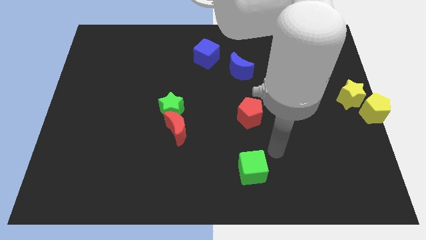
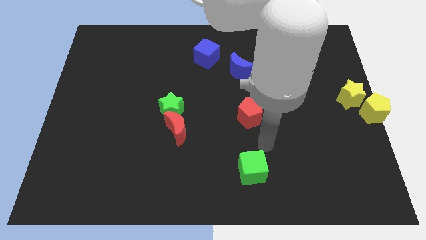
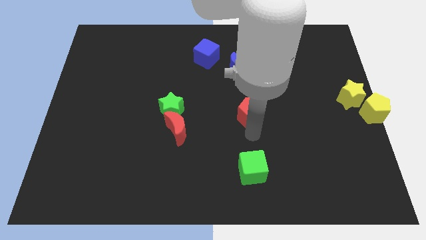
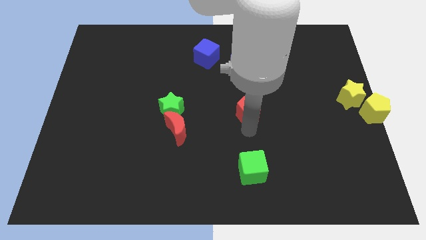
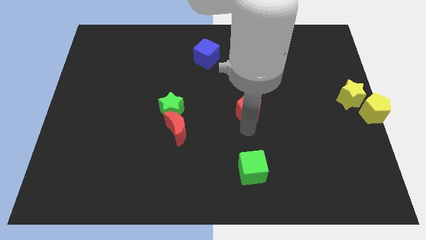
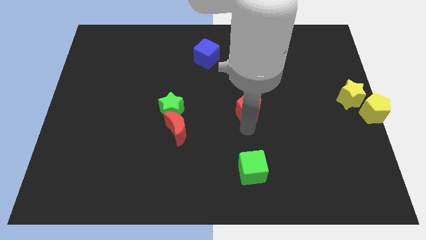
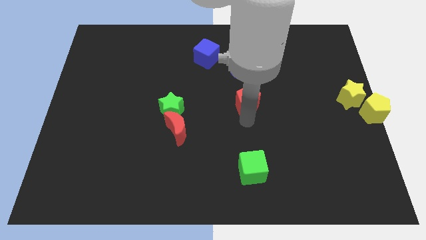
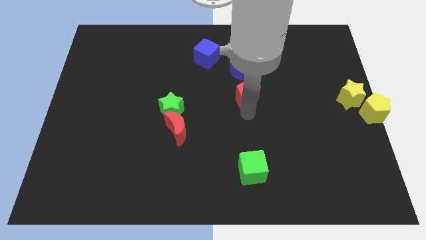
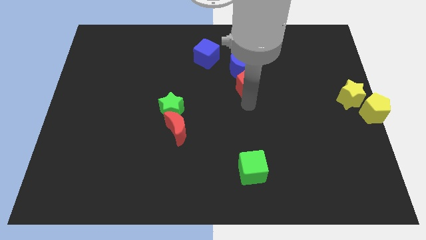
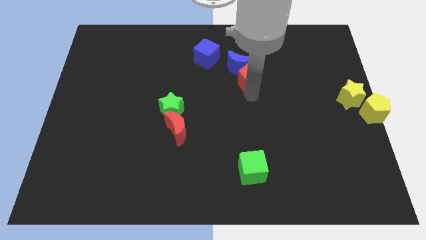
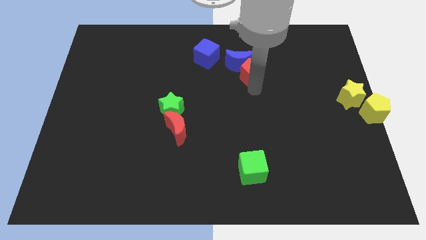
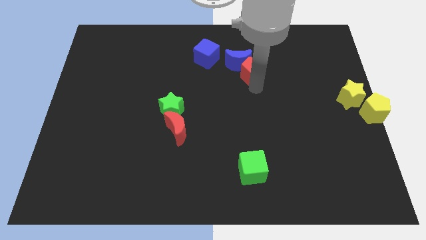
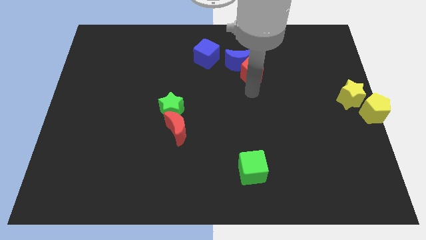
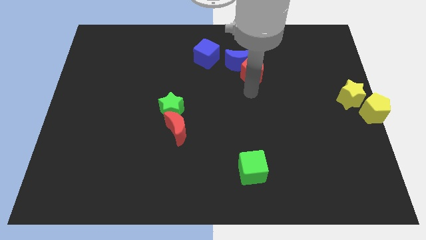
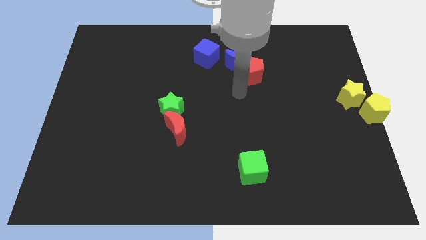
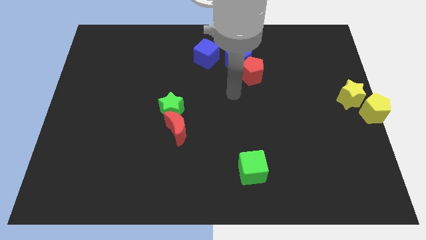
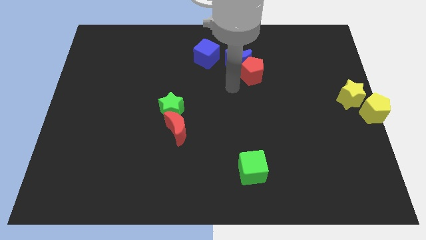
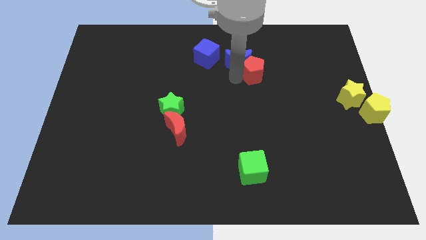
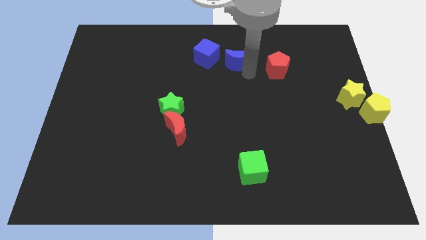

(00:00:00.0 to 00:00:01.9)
push the red pentagon into the blue crescent

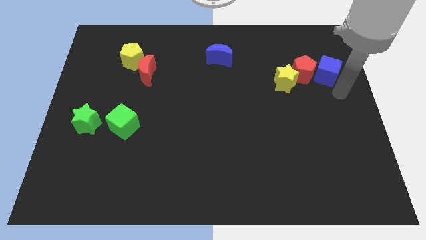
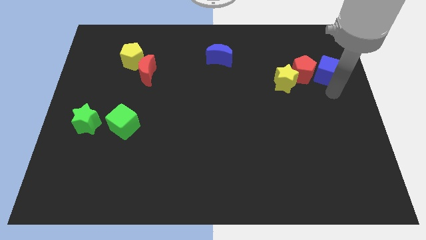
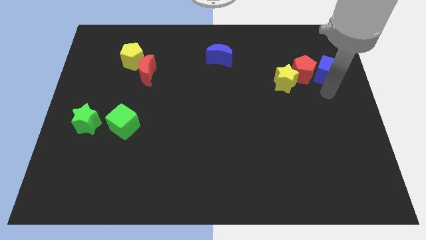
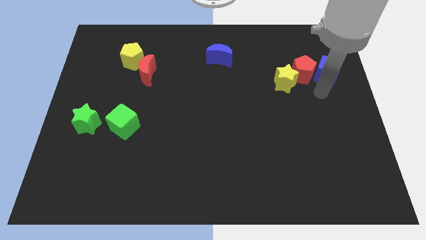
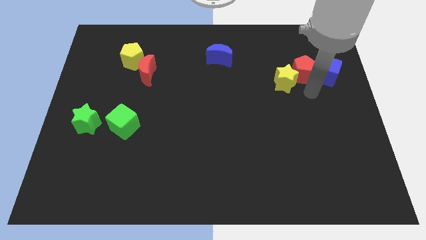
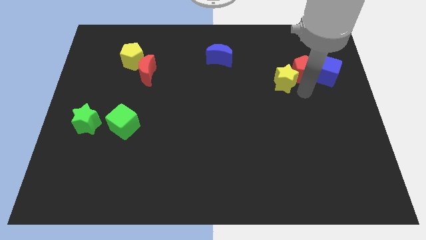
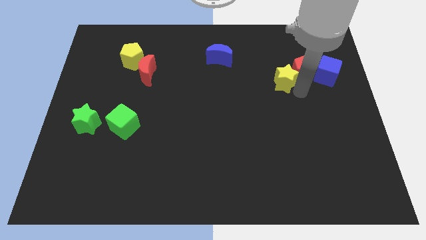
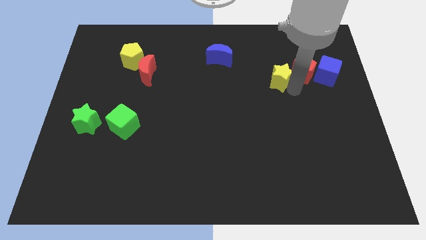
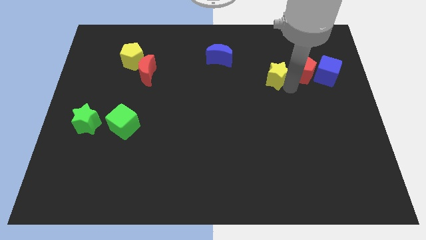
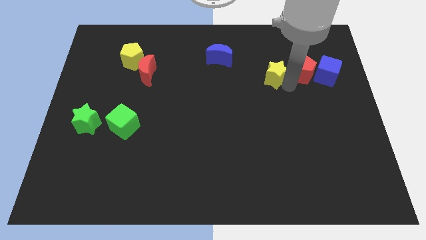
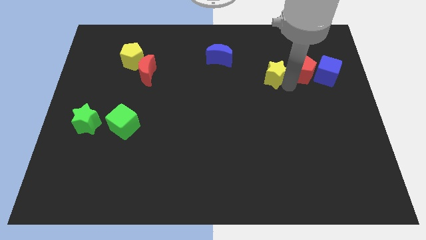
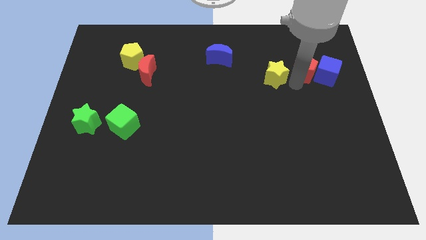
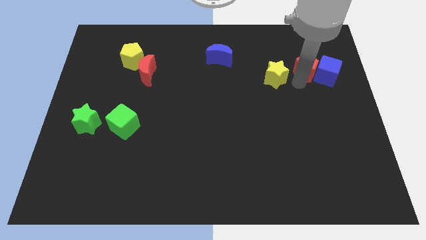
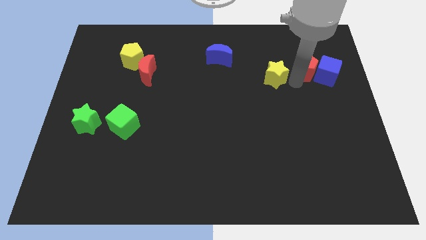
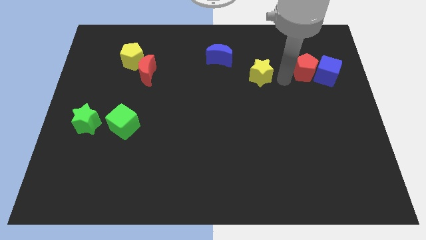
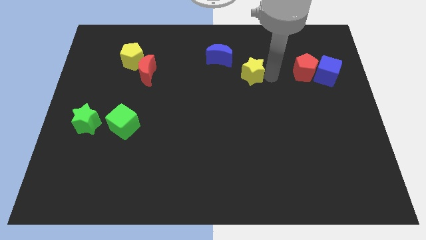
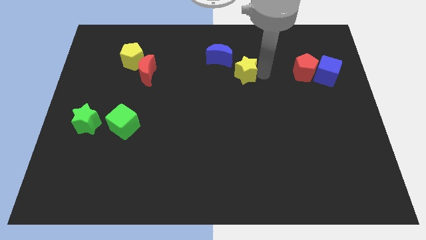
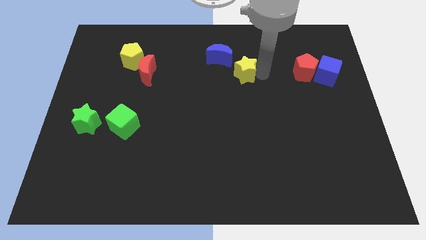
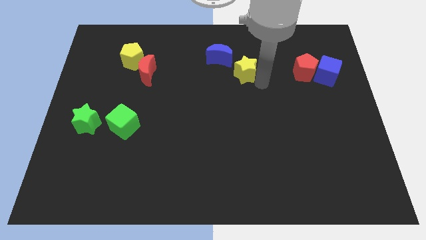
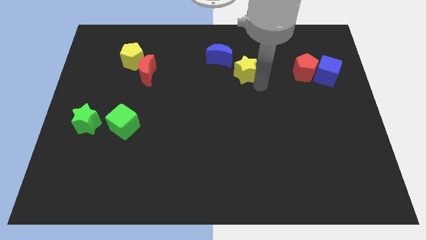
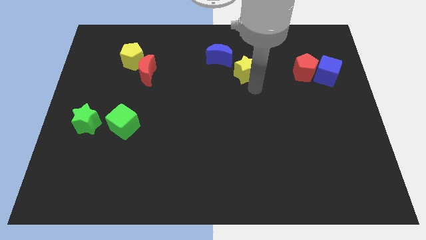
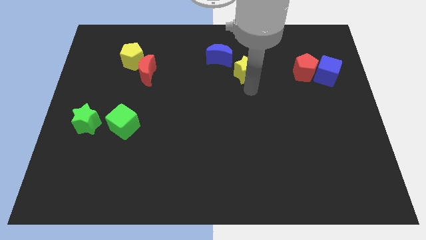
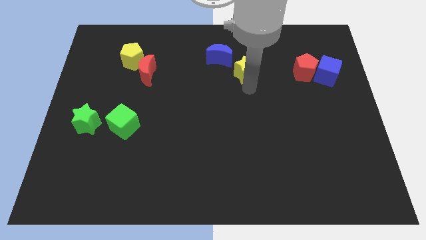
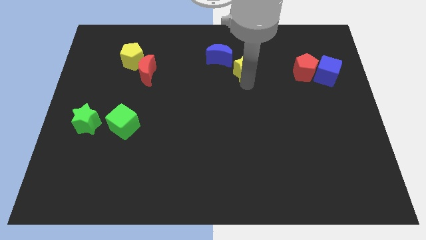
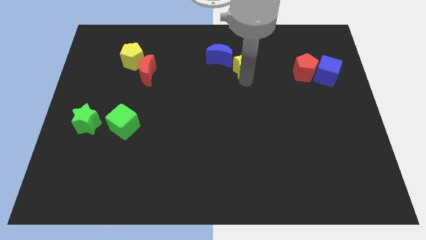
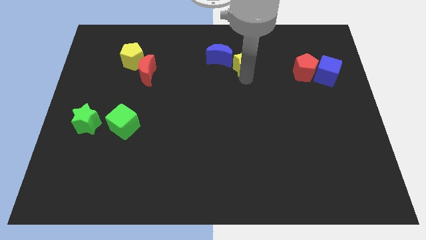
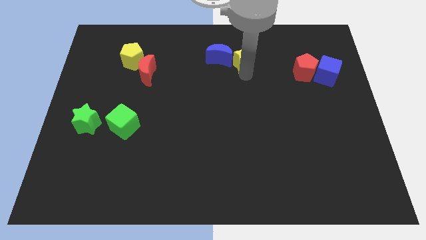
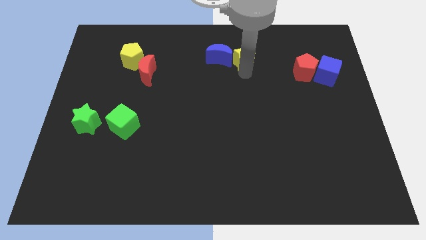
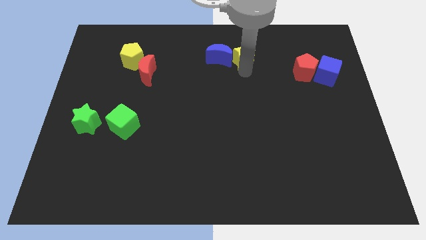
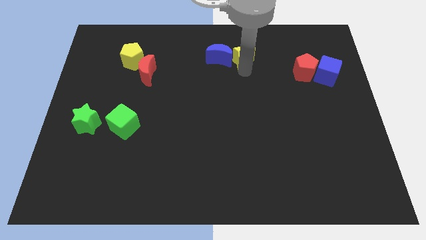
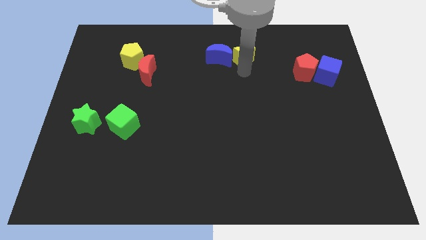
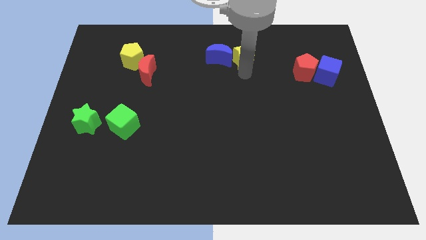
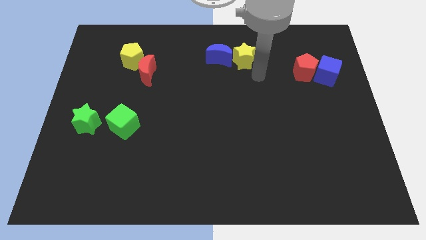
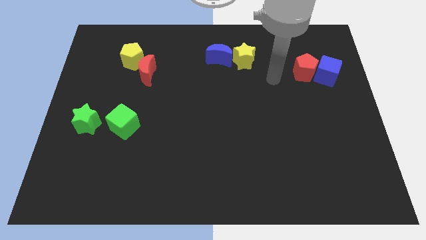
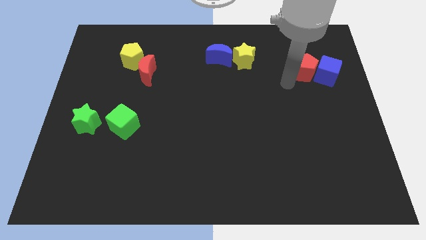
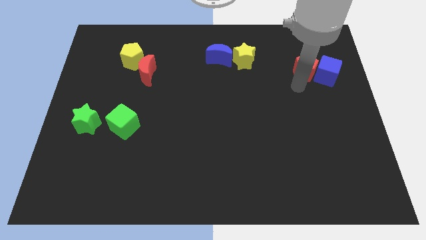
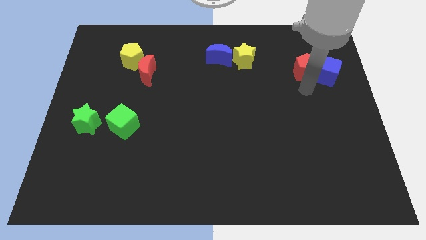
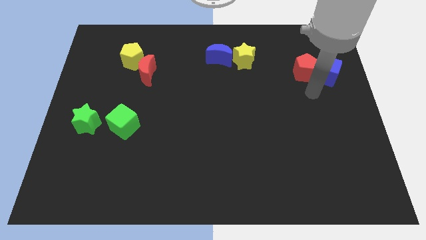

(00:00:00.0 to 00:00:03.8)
slide the yellow star to the right side of the blue moon

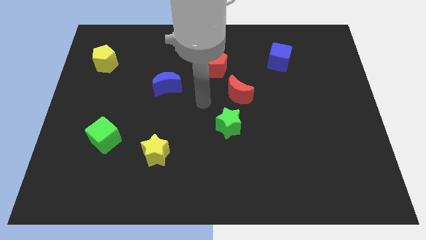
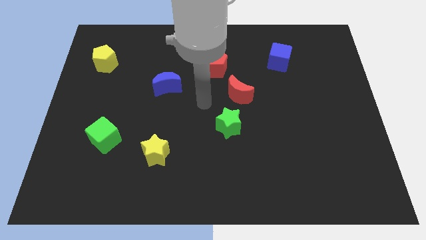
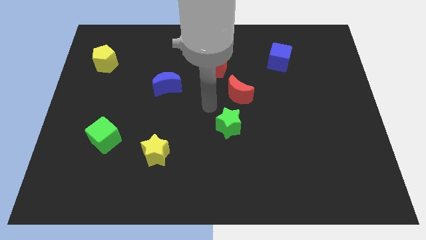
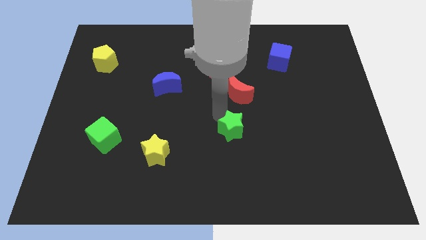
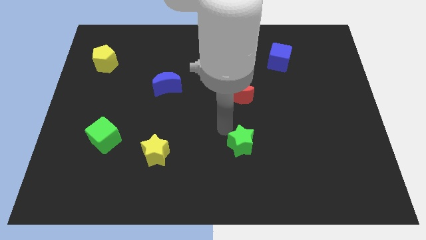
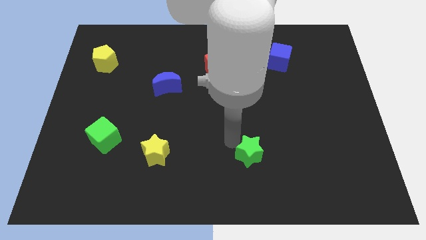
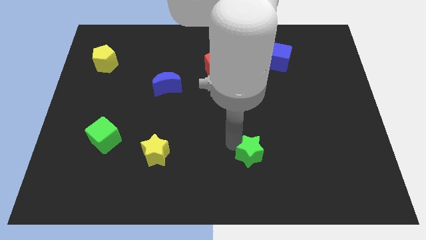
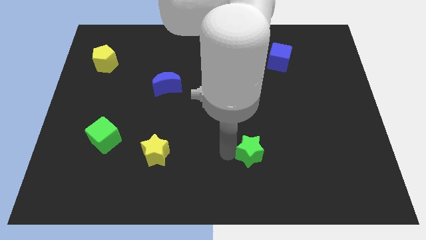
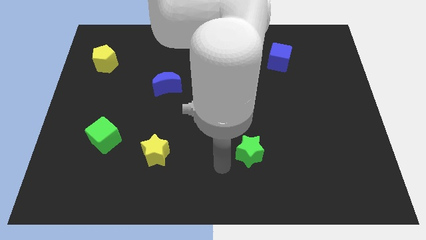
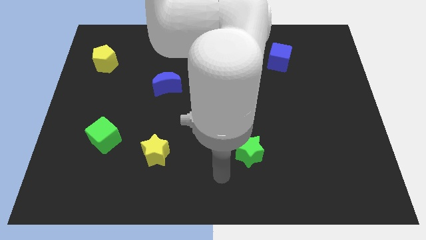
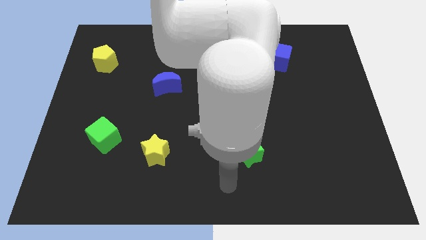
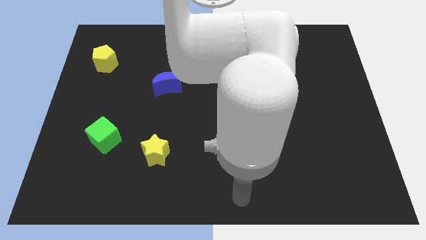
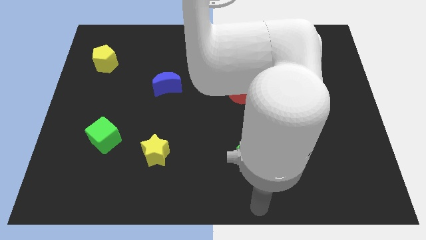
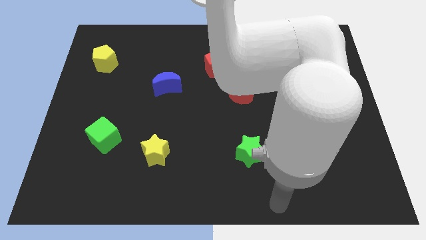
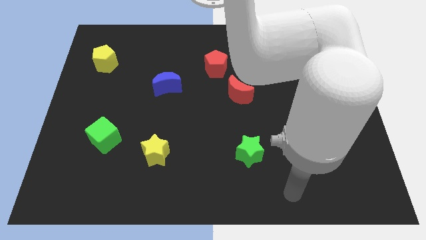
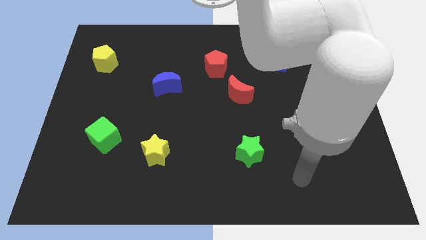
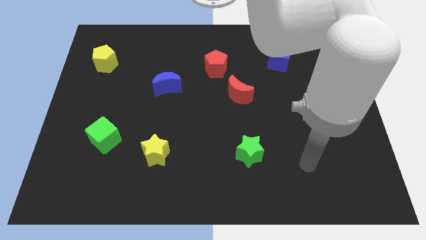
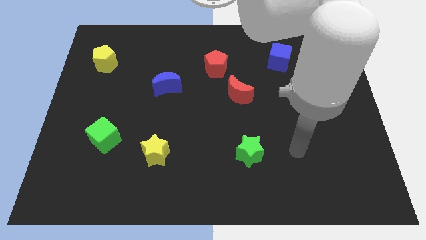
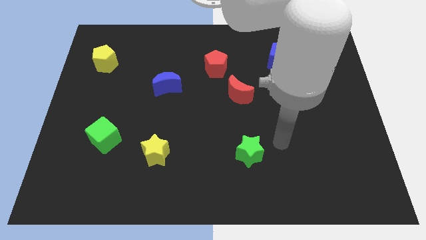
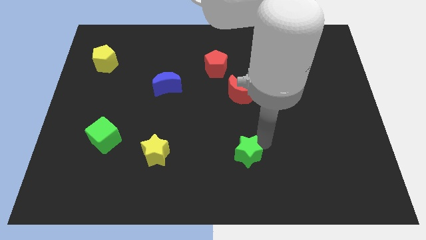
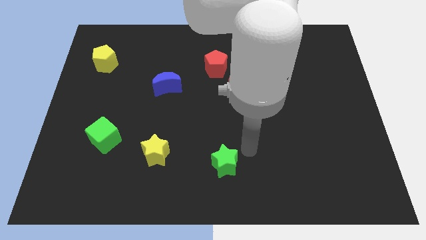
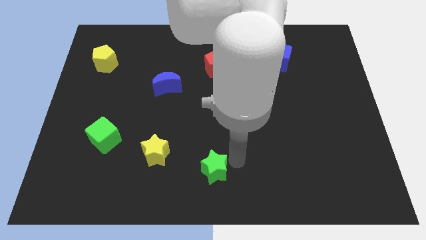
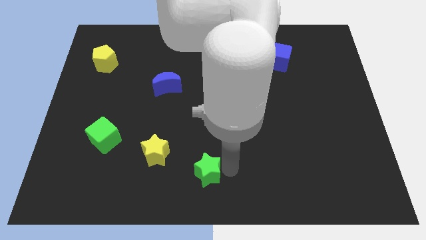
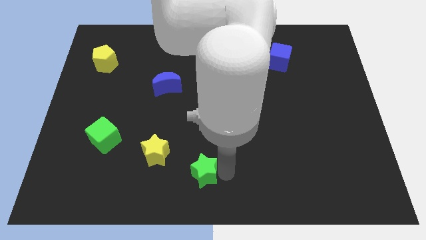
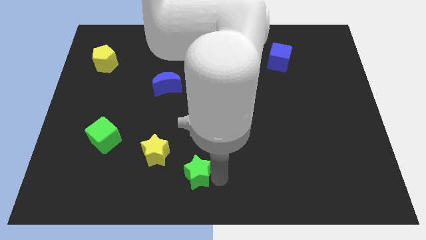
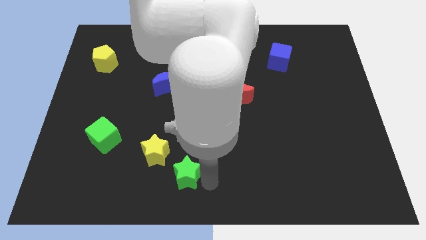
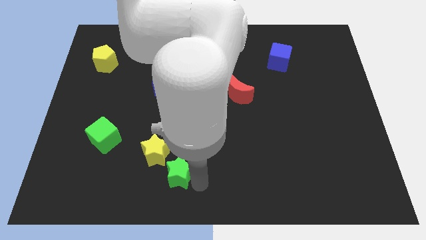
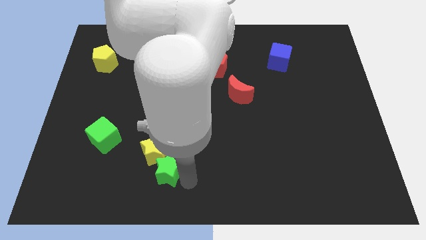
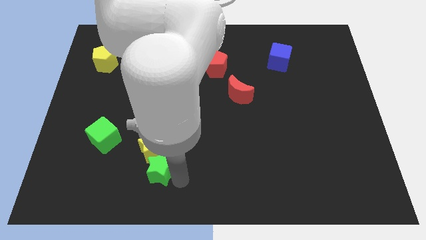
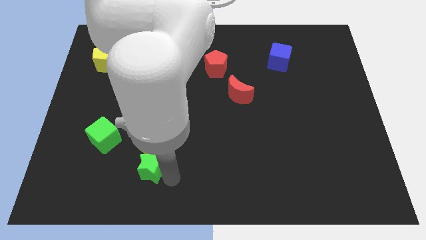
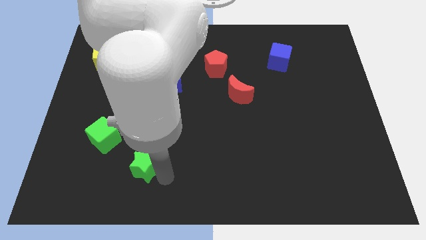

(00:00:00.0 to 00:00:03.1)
push the green star to the bottom center of the board

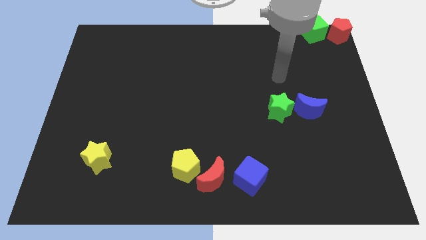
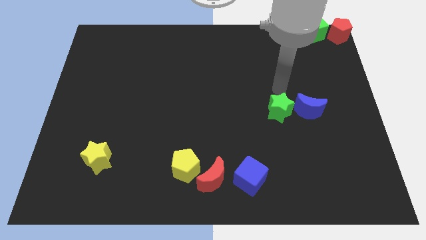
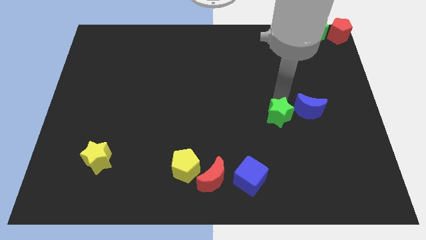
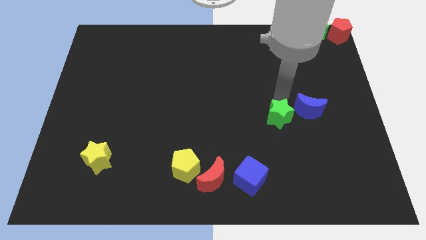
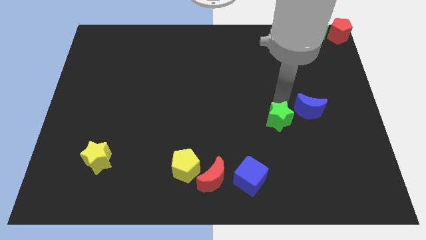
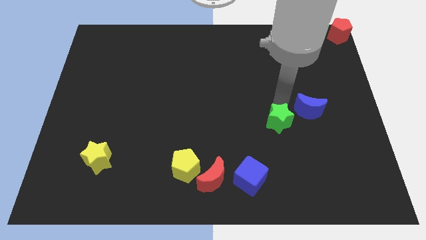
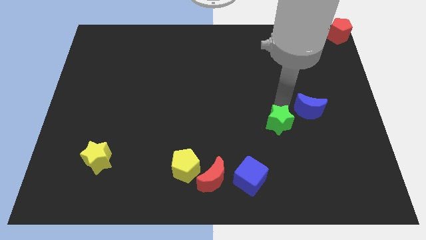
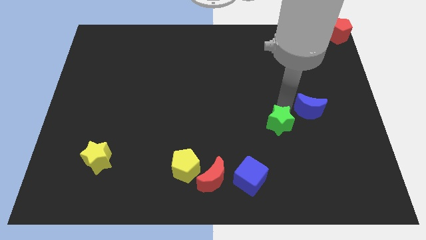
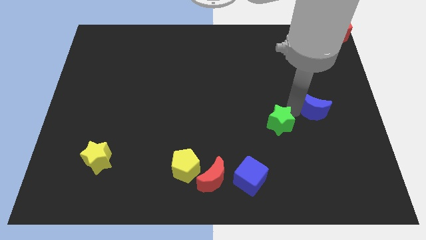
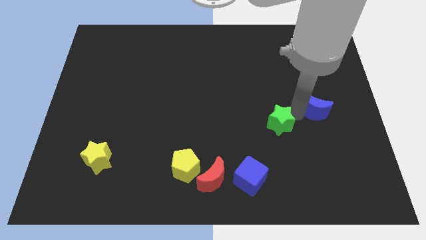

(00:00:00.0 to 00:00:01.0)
push the green star downwards slightly
